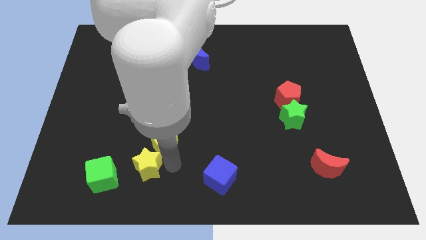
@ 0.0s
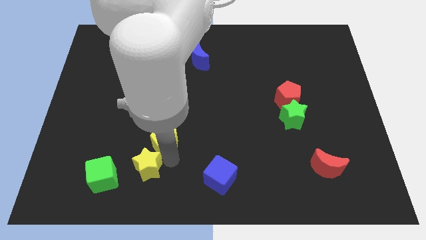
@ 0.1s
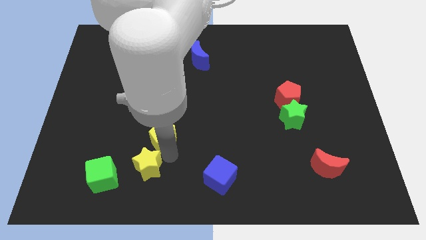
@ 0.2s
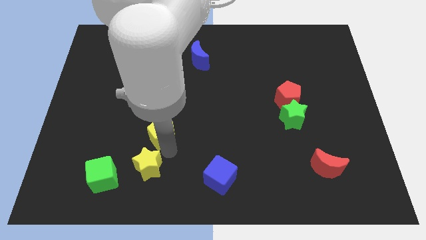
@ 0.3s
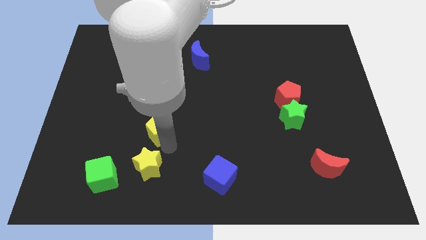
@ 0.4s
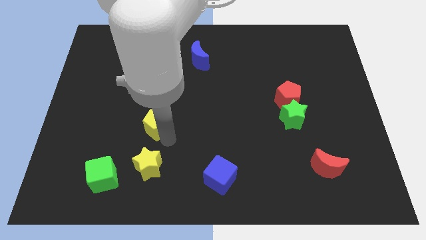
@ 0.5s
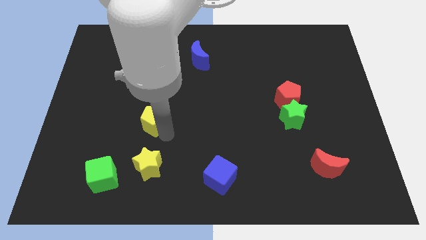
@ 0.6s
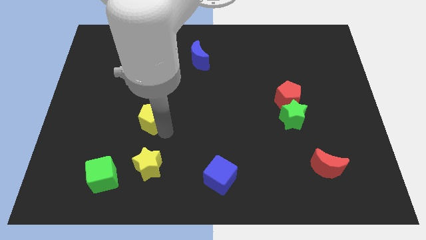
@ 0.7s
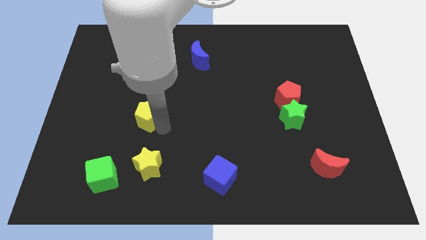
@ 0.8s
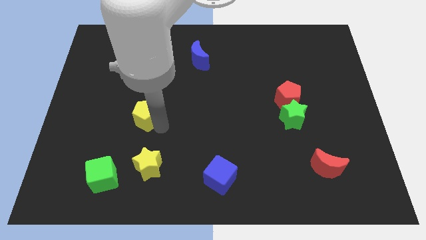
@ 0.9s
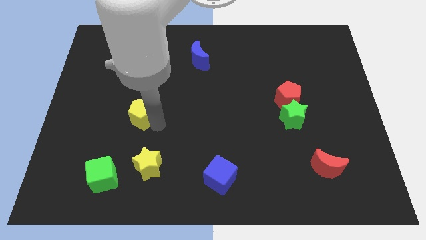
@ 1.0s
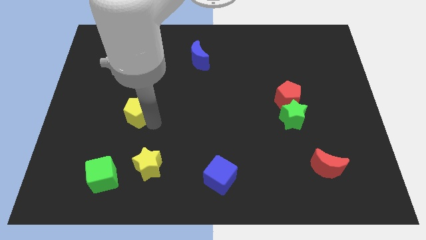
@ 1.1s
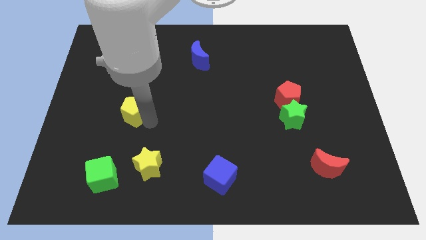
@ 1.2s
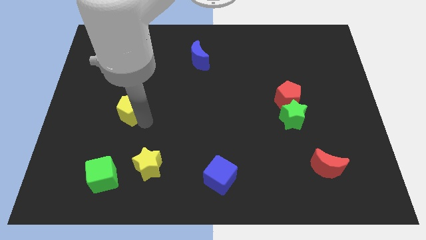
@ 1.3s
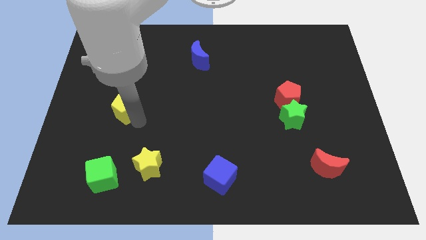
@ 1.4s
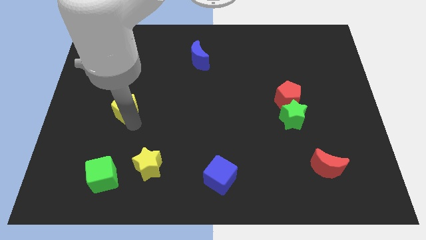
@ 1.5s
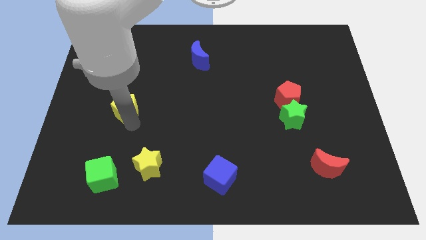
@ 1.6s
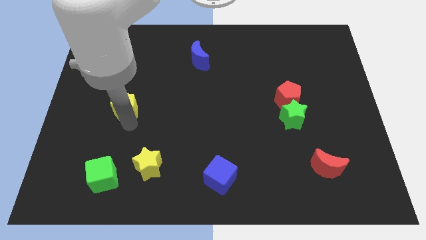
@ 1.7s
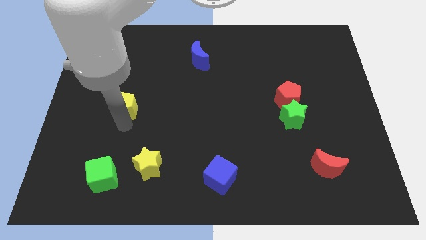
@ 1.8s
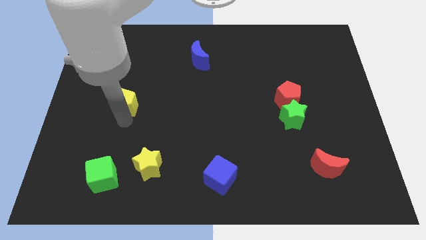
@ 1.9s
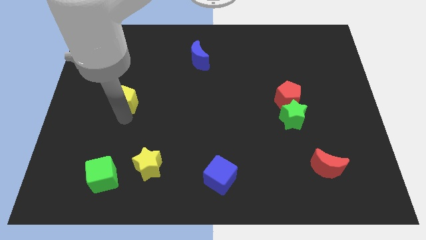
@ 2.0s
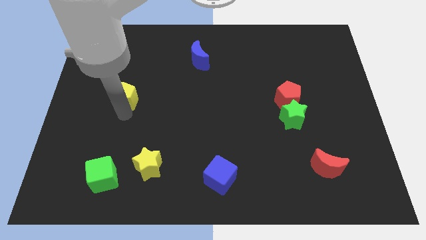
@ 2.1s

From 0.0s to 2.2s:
separate yellow pentagon from yellow star

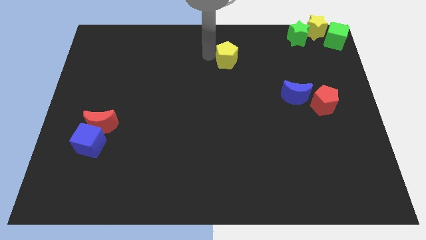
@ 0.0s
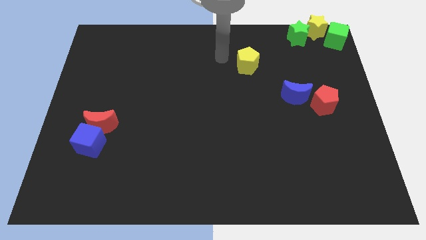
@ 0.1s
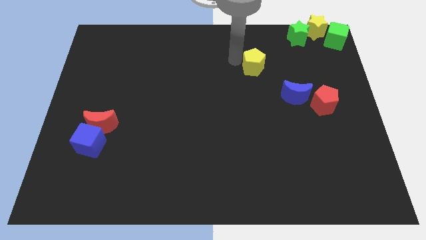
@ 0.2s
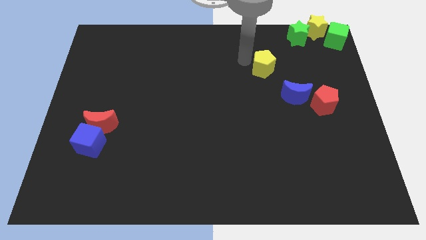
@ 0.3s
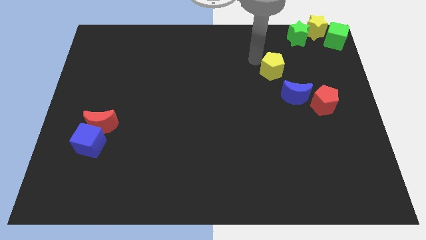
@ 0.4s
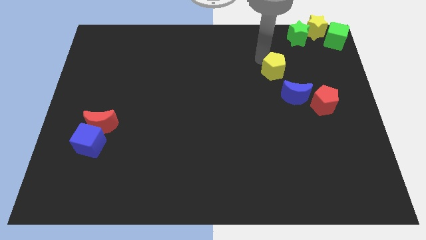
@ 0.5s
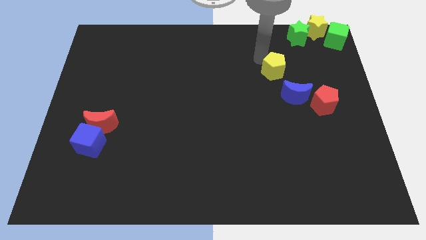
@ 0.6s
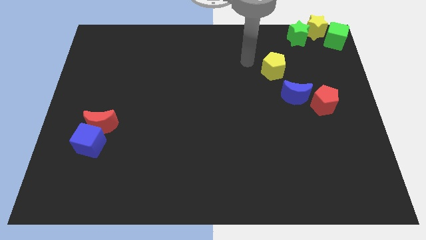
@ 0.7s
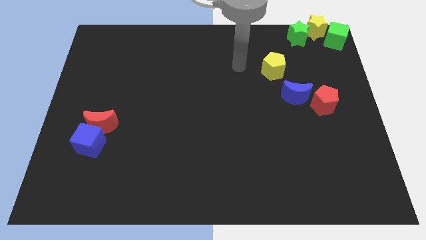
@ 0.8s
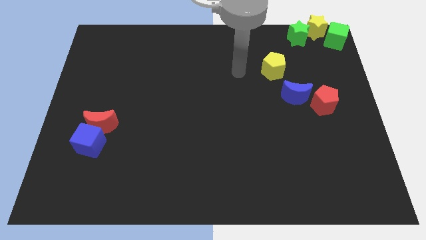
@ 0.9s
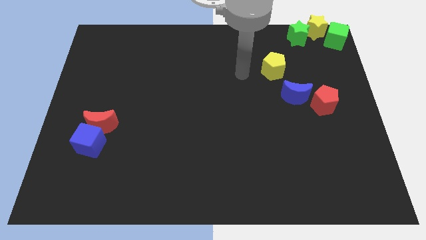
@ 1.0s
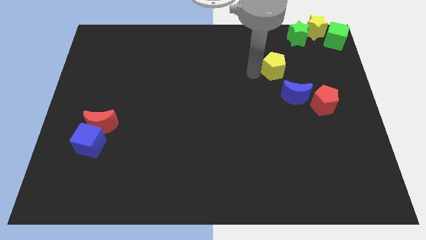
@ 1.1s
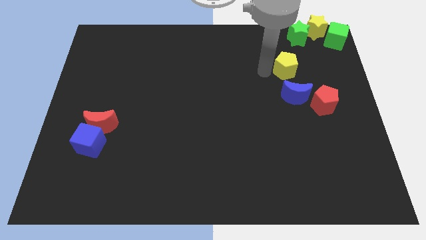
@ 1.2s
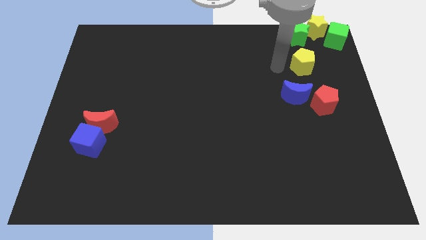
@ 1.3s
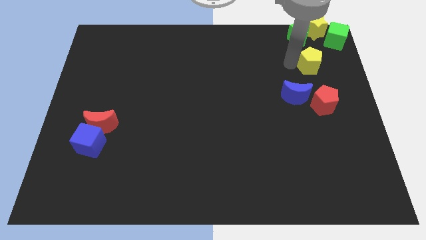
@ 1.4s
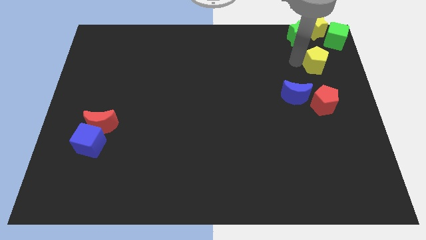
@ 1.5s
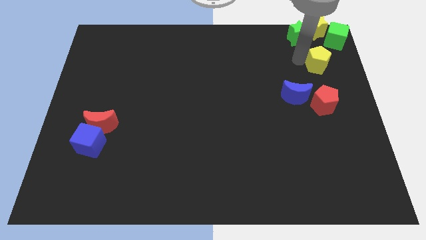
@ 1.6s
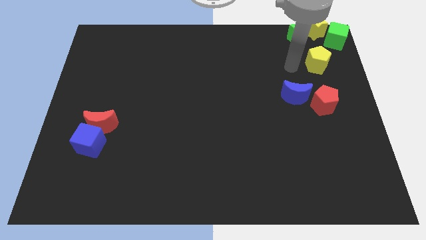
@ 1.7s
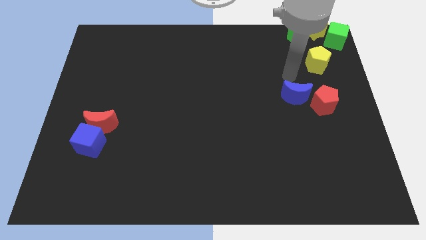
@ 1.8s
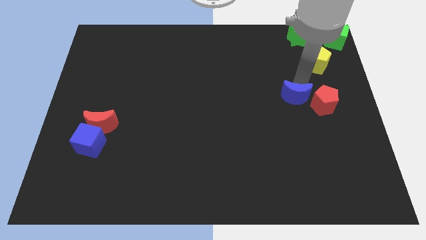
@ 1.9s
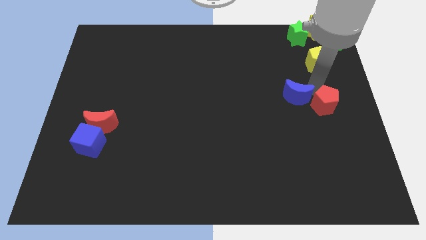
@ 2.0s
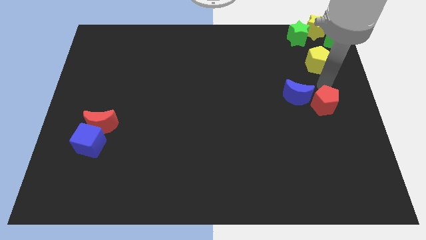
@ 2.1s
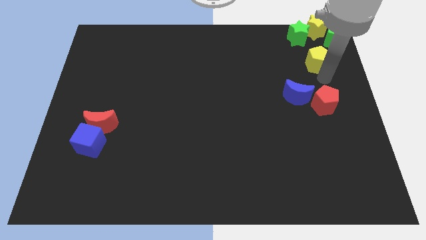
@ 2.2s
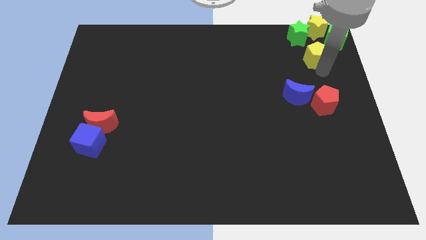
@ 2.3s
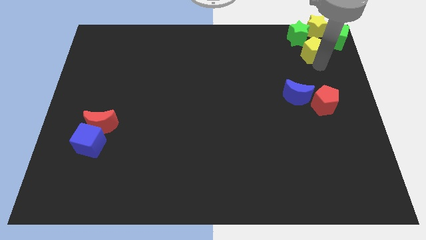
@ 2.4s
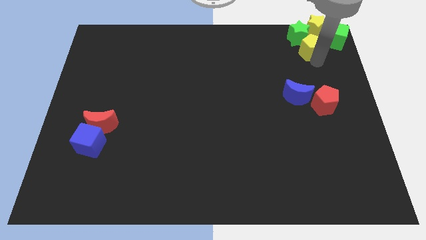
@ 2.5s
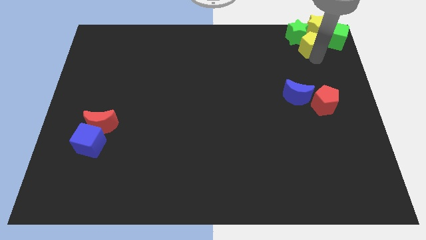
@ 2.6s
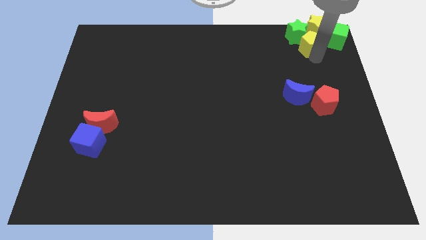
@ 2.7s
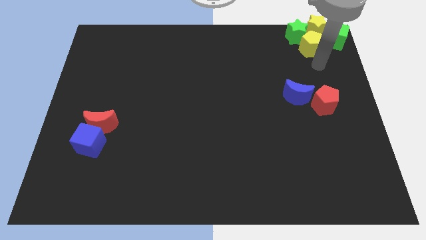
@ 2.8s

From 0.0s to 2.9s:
make the yellow pentagon to touch the bottom side of the green star

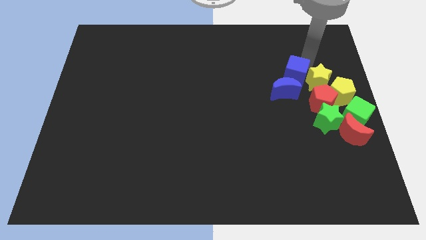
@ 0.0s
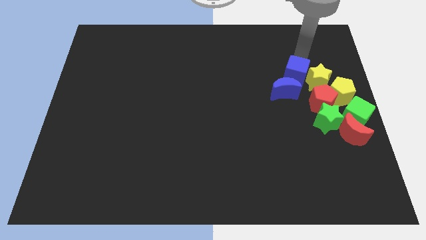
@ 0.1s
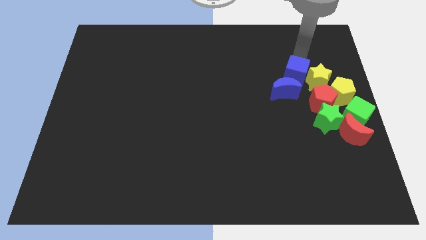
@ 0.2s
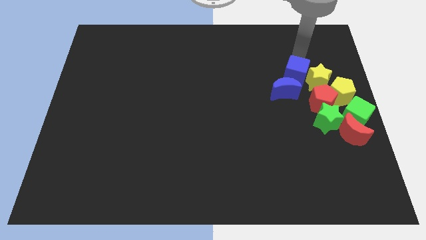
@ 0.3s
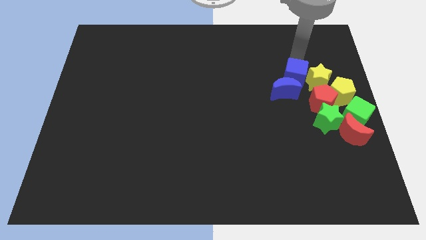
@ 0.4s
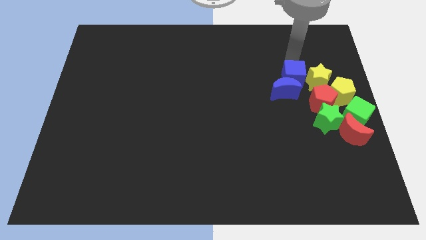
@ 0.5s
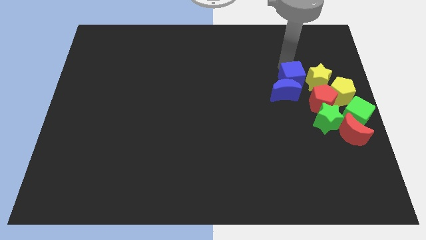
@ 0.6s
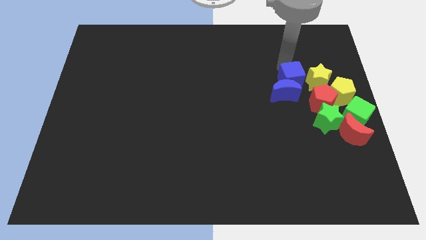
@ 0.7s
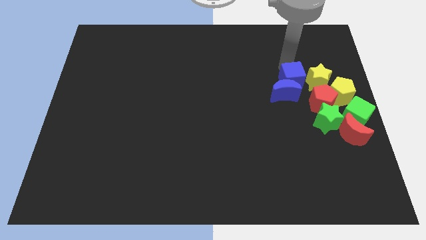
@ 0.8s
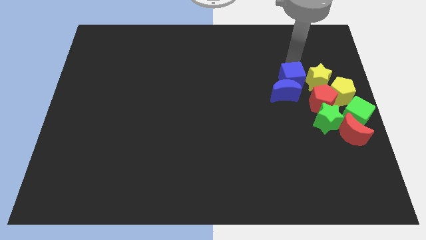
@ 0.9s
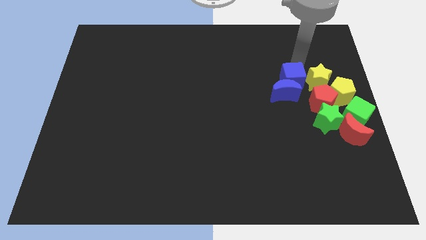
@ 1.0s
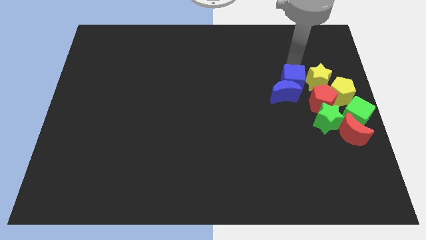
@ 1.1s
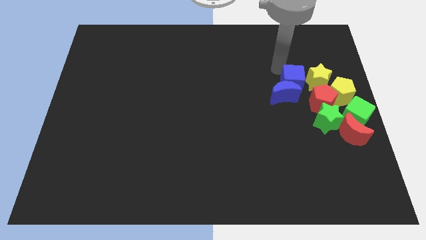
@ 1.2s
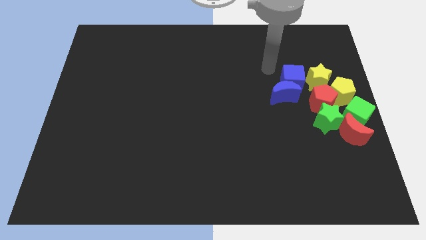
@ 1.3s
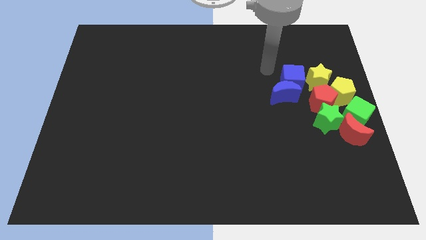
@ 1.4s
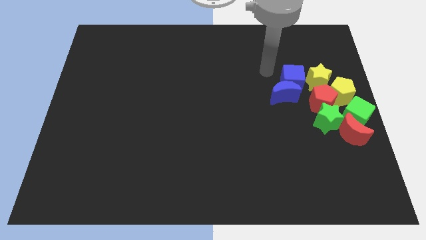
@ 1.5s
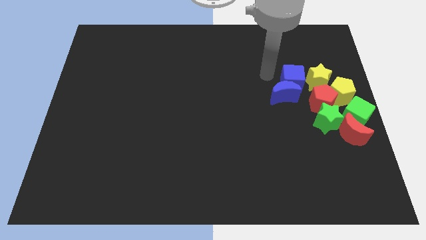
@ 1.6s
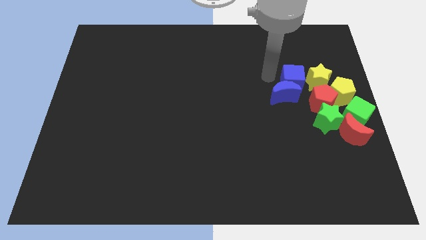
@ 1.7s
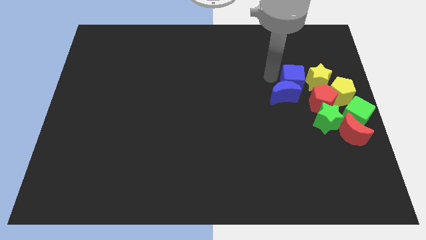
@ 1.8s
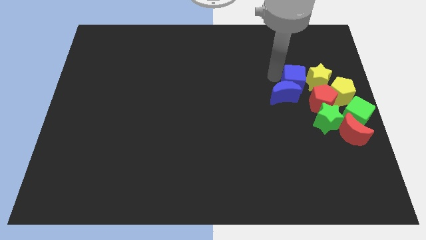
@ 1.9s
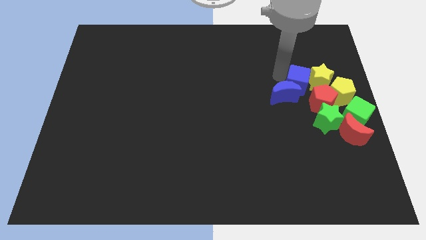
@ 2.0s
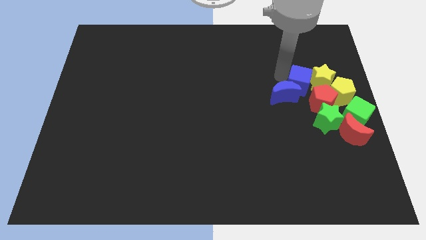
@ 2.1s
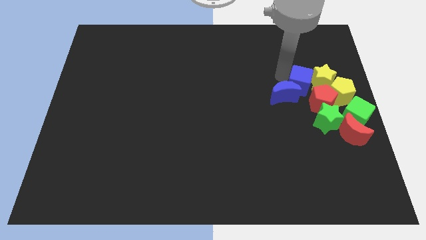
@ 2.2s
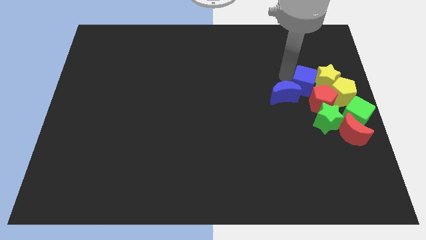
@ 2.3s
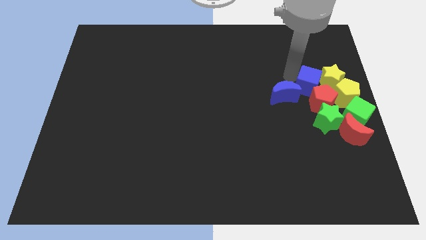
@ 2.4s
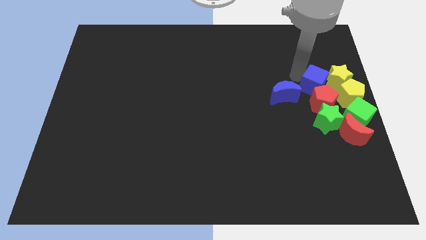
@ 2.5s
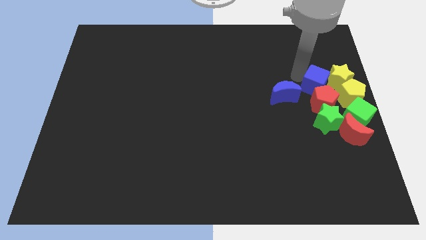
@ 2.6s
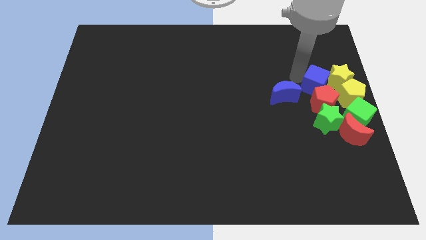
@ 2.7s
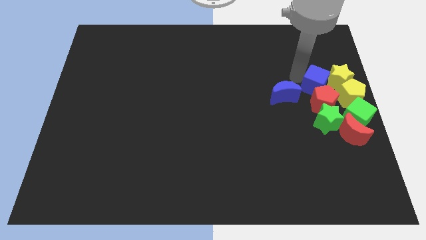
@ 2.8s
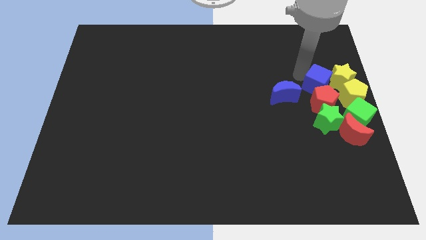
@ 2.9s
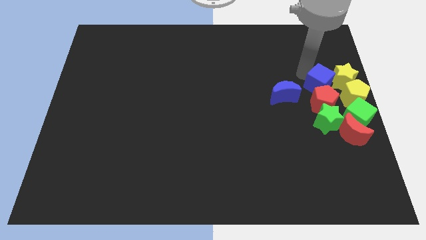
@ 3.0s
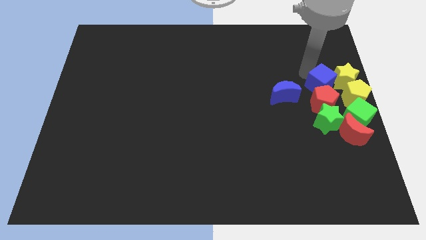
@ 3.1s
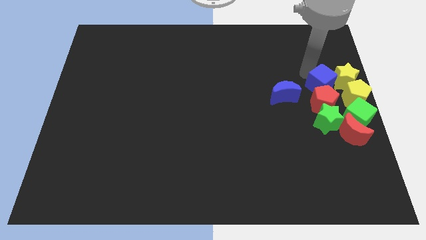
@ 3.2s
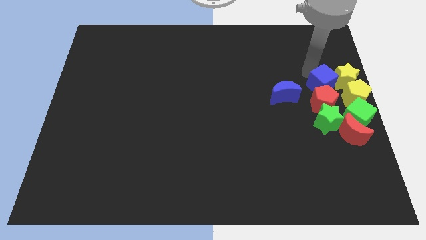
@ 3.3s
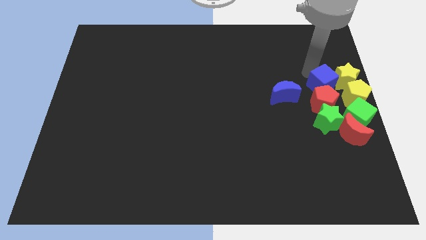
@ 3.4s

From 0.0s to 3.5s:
push blue cube into yellow star

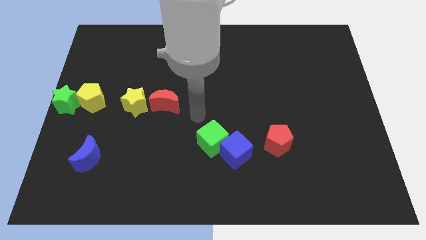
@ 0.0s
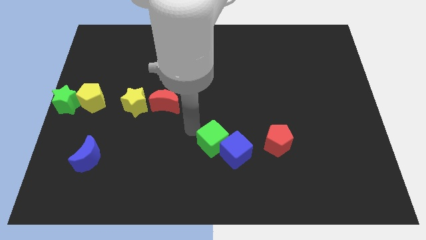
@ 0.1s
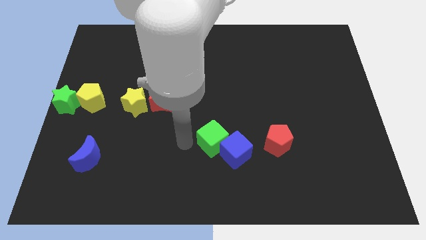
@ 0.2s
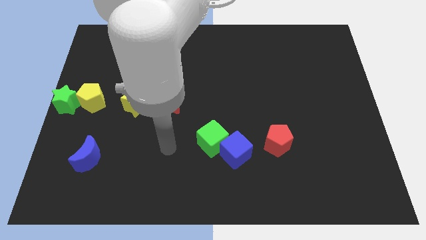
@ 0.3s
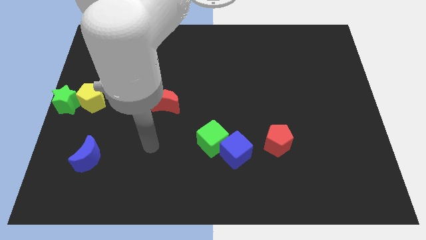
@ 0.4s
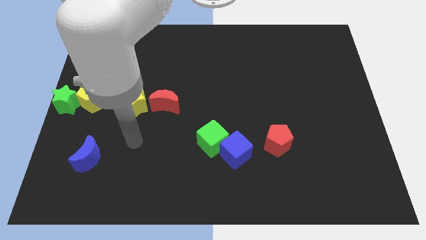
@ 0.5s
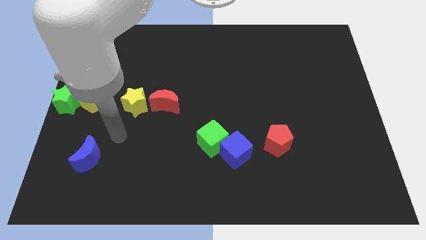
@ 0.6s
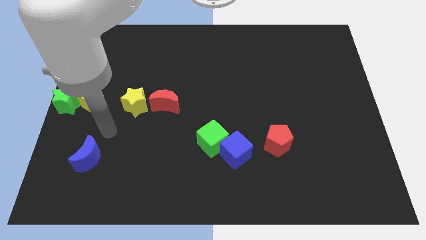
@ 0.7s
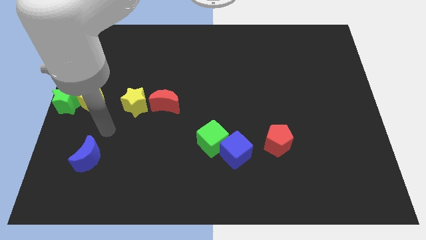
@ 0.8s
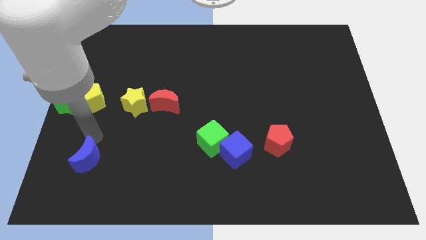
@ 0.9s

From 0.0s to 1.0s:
put your arm on the top of blue crescent
